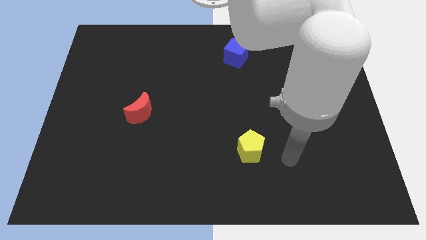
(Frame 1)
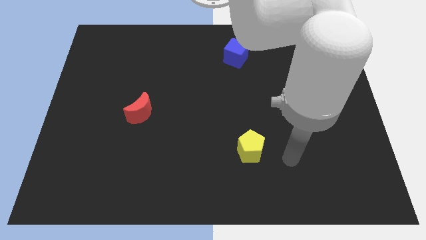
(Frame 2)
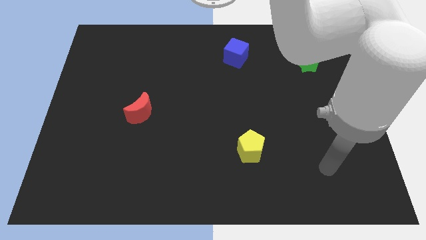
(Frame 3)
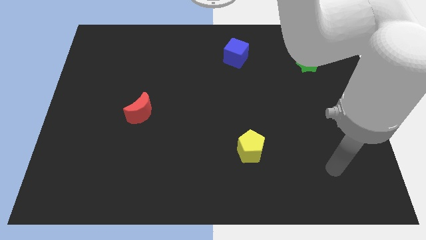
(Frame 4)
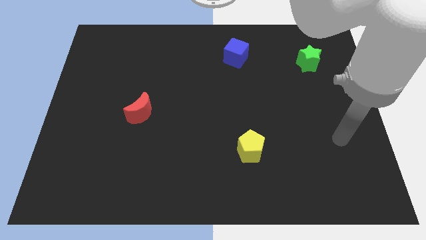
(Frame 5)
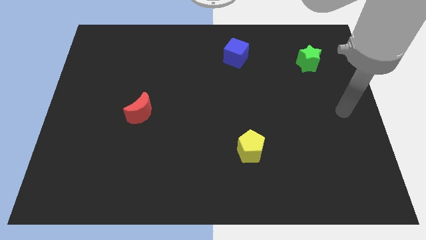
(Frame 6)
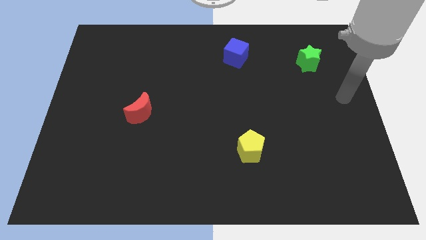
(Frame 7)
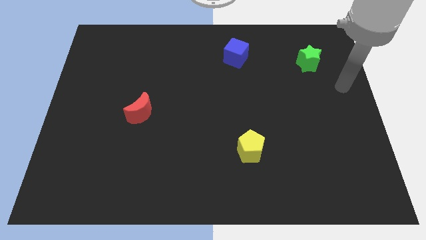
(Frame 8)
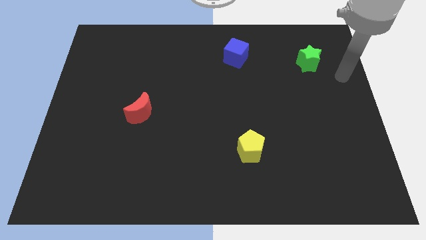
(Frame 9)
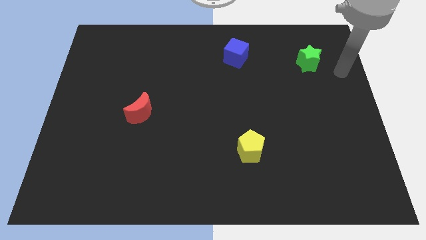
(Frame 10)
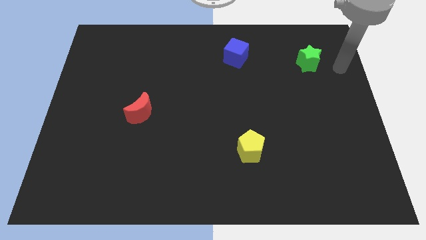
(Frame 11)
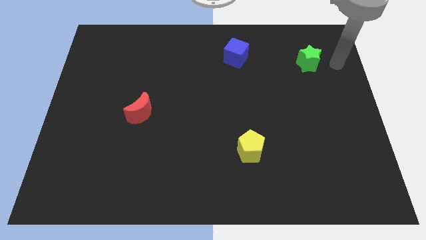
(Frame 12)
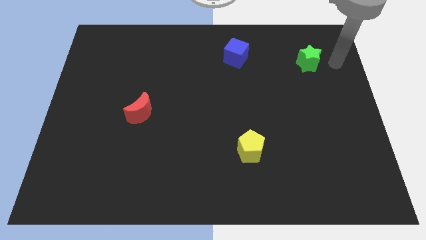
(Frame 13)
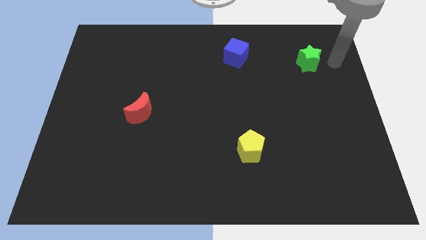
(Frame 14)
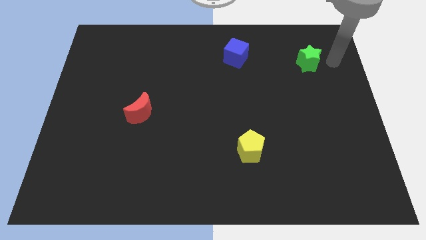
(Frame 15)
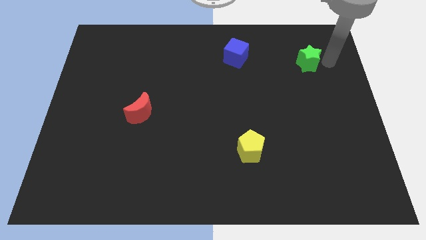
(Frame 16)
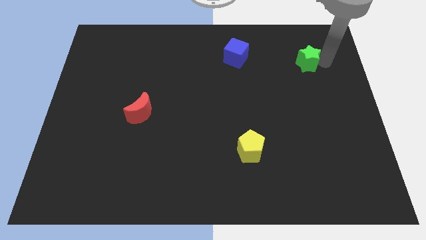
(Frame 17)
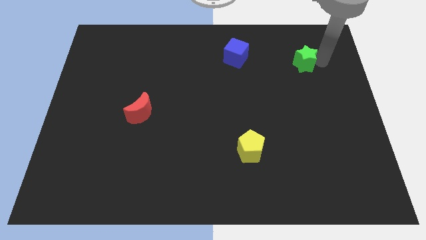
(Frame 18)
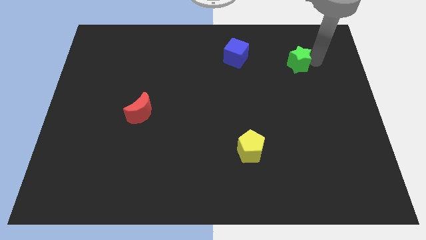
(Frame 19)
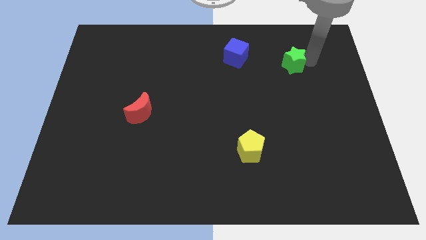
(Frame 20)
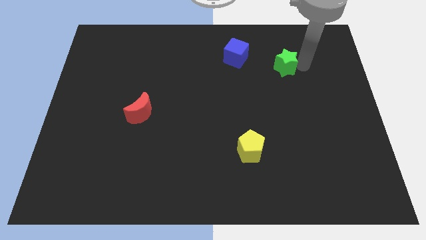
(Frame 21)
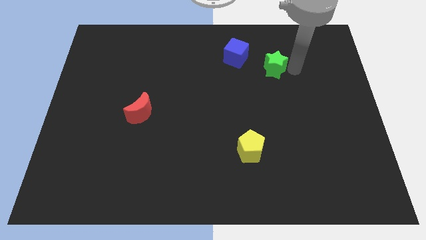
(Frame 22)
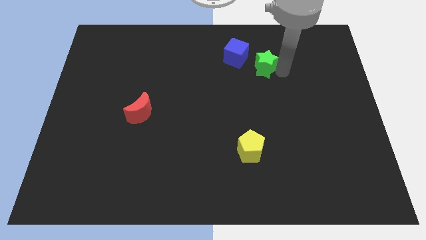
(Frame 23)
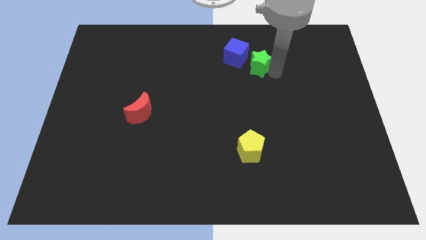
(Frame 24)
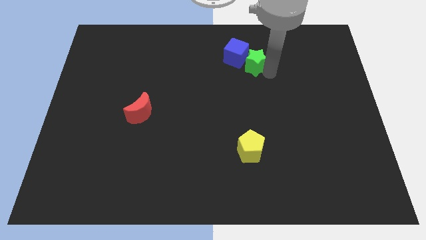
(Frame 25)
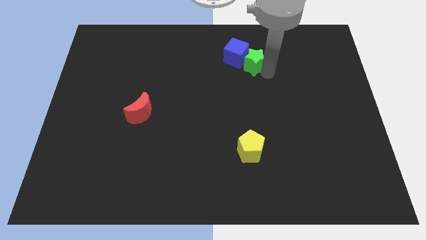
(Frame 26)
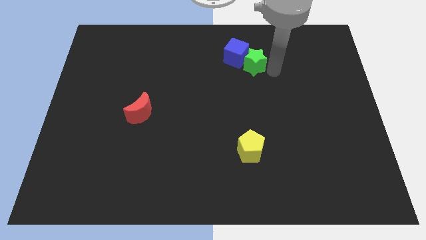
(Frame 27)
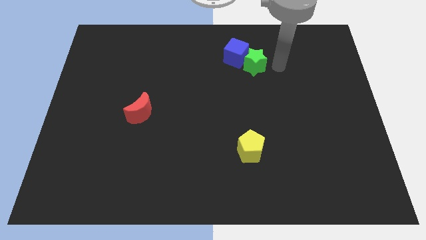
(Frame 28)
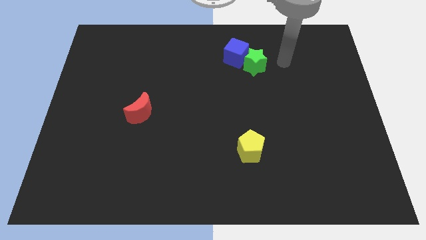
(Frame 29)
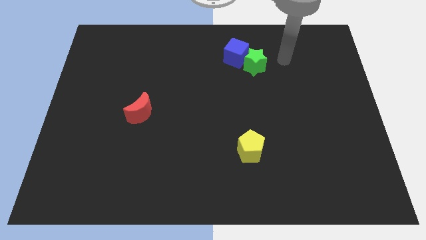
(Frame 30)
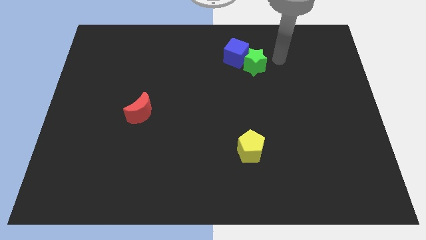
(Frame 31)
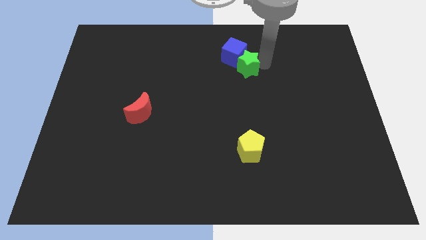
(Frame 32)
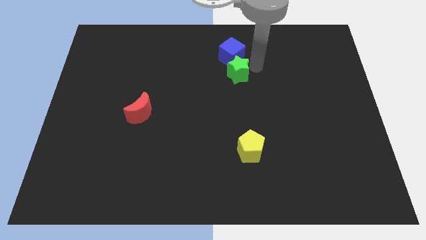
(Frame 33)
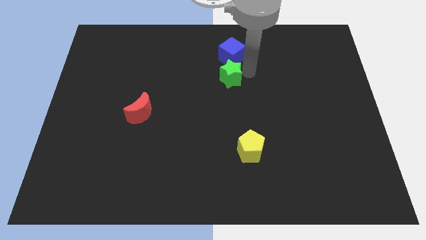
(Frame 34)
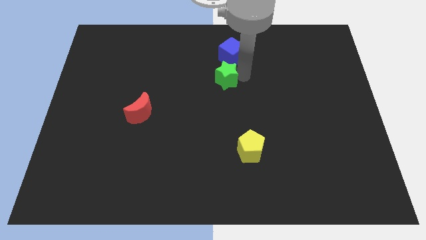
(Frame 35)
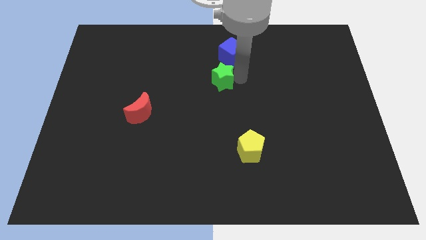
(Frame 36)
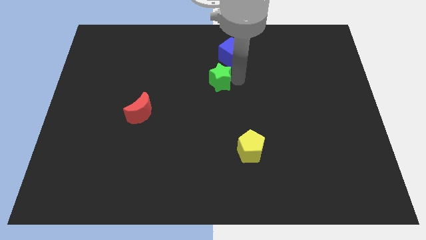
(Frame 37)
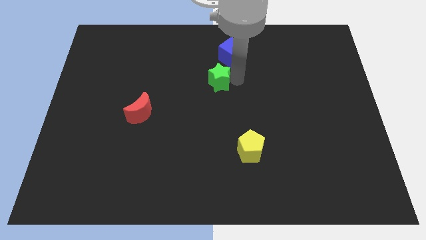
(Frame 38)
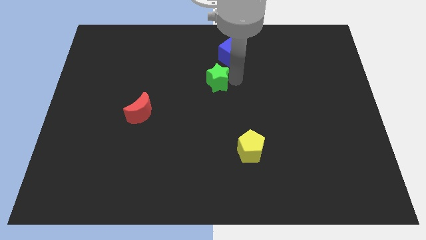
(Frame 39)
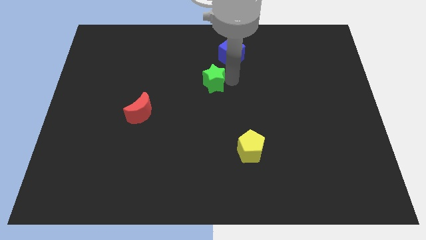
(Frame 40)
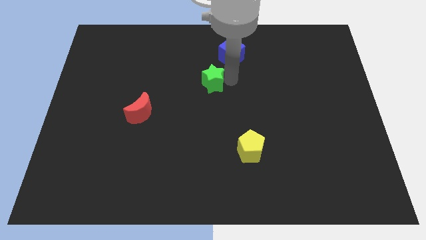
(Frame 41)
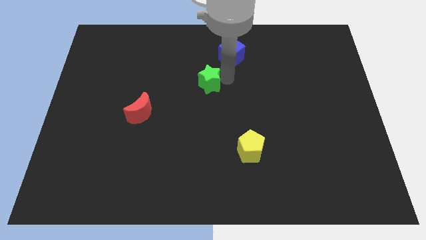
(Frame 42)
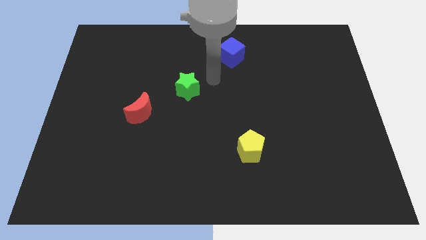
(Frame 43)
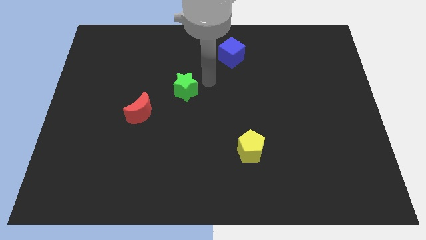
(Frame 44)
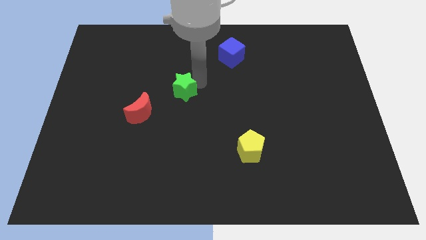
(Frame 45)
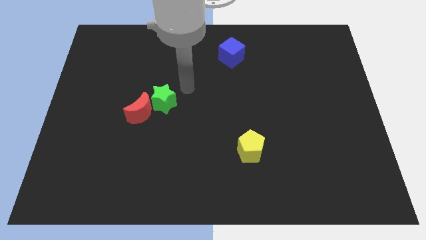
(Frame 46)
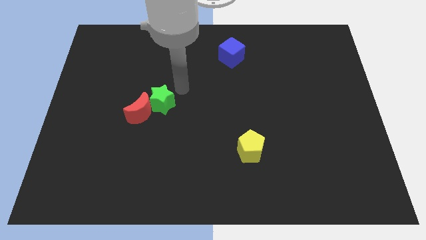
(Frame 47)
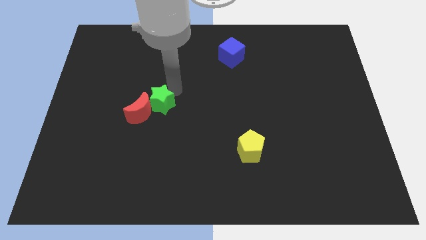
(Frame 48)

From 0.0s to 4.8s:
push the green star next to the red moon

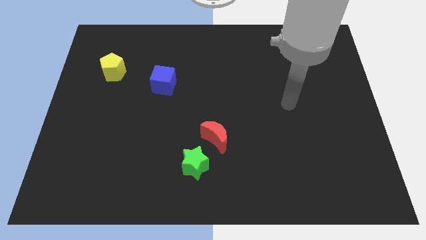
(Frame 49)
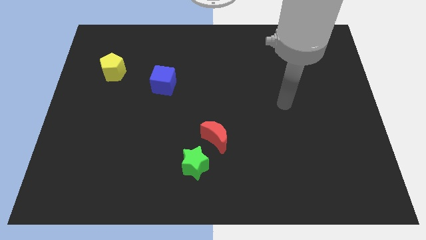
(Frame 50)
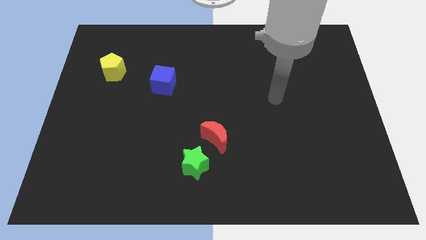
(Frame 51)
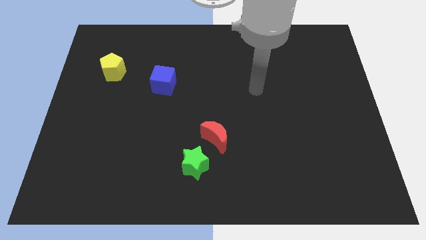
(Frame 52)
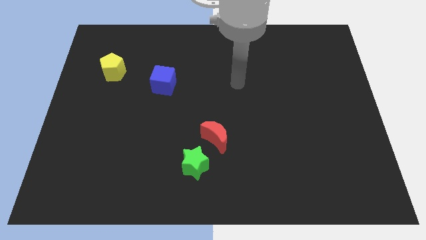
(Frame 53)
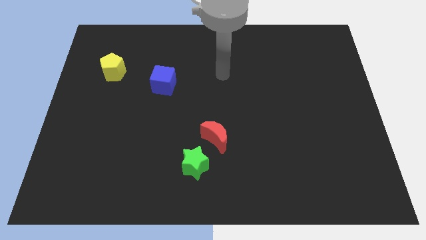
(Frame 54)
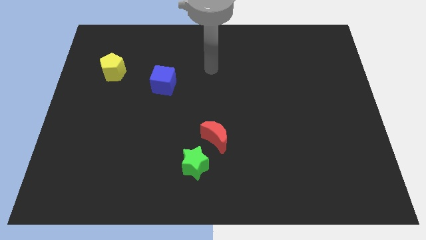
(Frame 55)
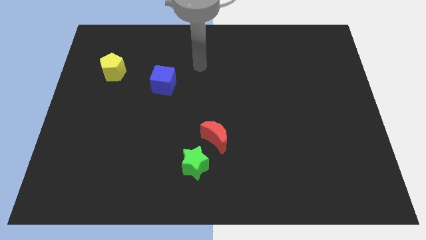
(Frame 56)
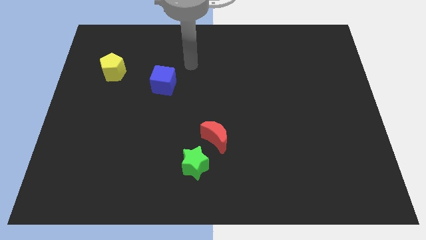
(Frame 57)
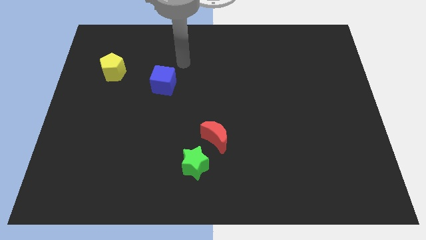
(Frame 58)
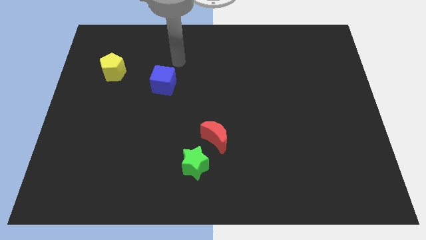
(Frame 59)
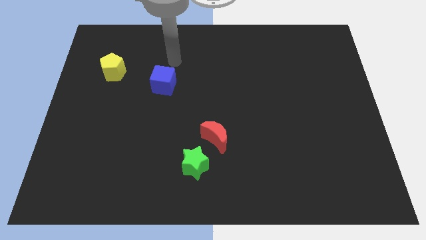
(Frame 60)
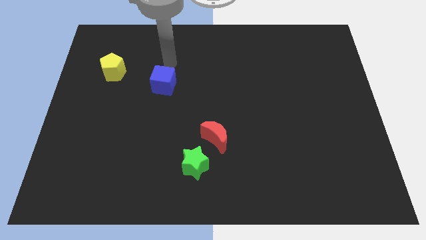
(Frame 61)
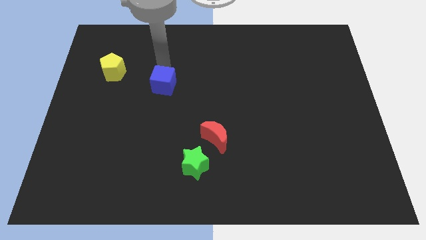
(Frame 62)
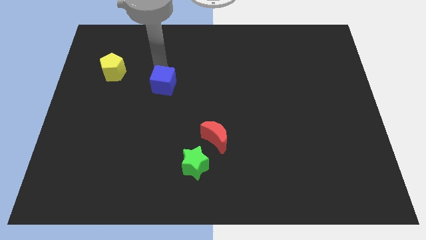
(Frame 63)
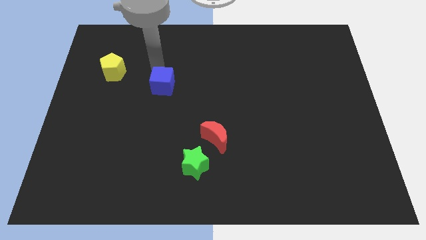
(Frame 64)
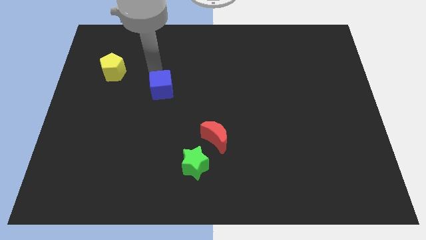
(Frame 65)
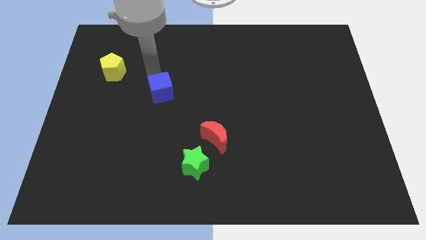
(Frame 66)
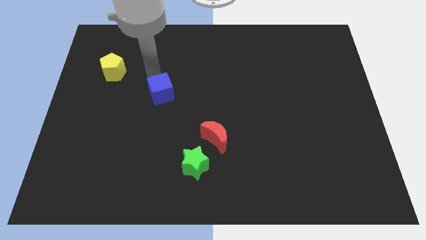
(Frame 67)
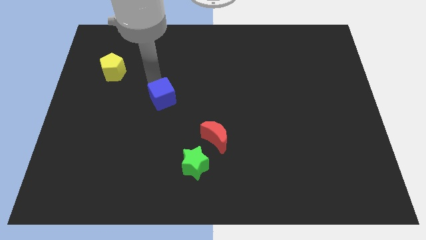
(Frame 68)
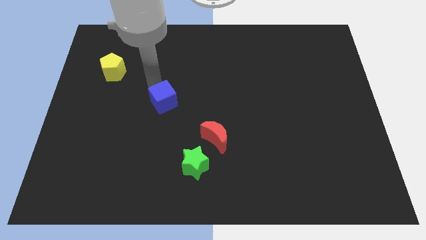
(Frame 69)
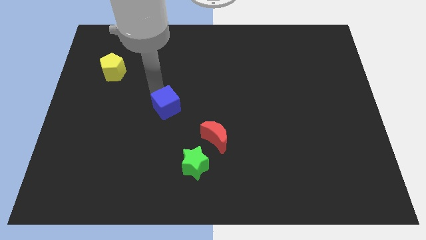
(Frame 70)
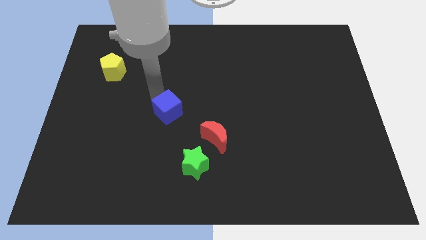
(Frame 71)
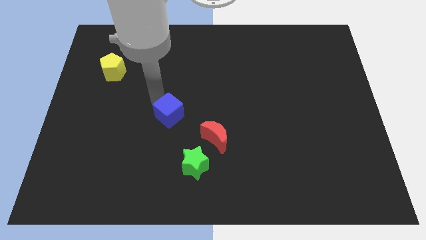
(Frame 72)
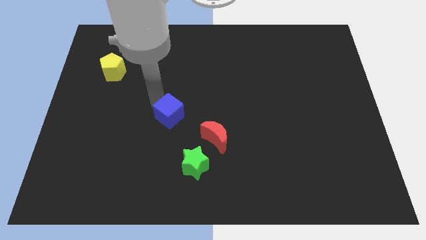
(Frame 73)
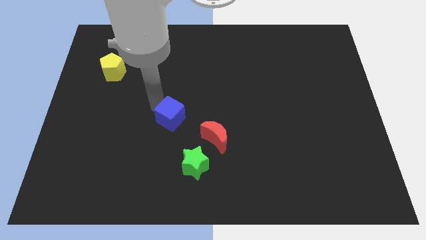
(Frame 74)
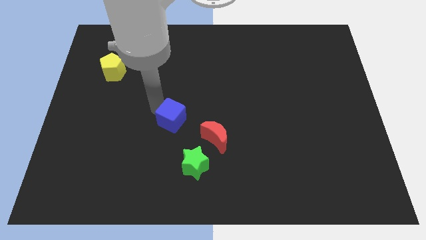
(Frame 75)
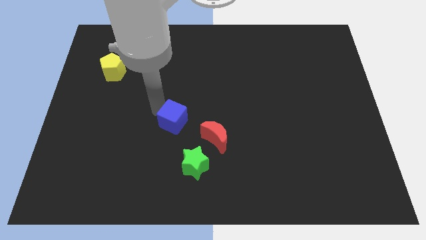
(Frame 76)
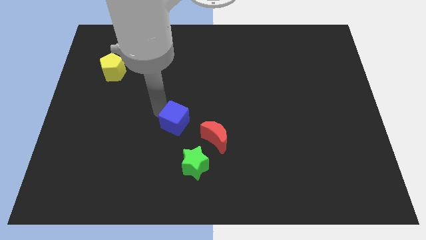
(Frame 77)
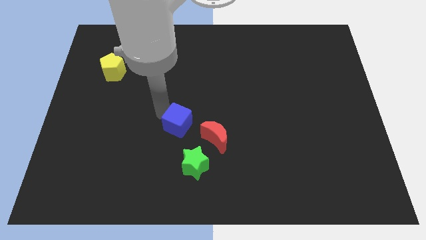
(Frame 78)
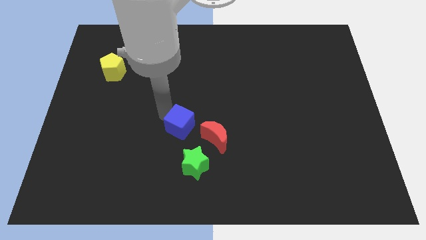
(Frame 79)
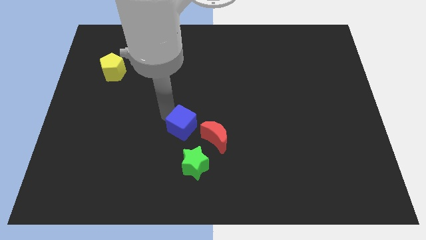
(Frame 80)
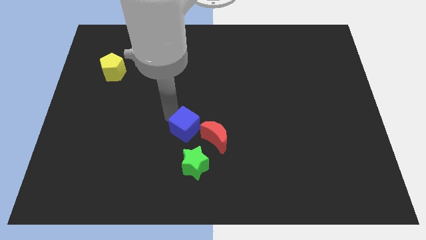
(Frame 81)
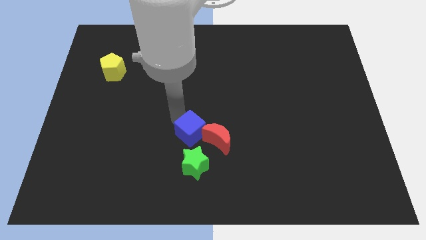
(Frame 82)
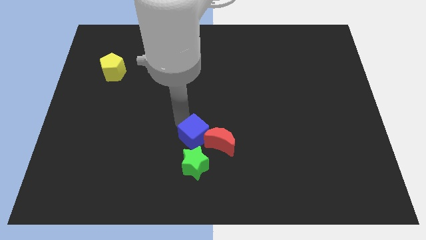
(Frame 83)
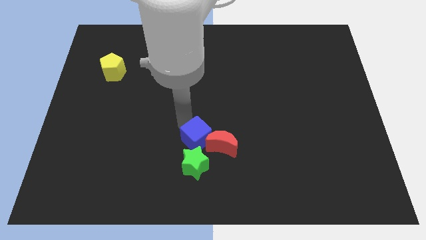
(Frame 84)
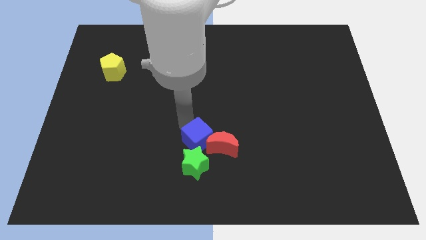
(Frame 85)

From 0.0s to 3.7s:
move the cube to the moon
